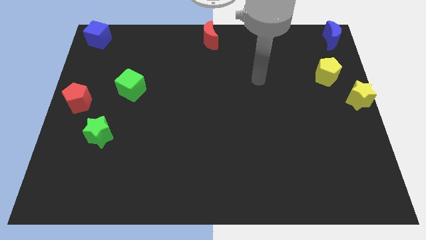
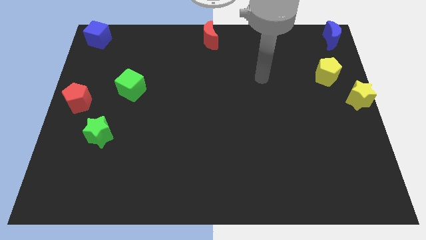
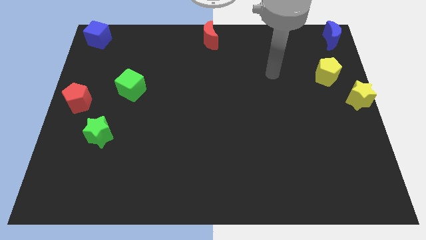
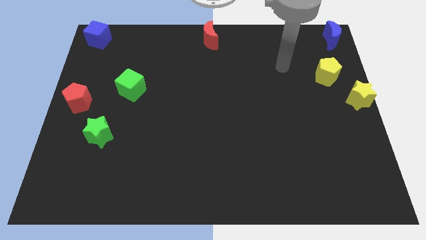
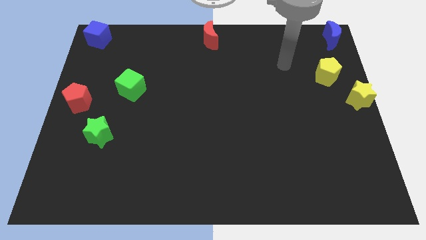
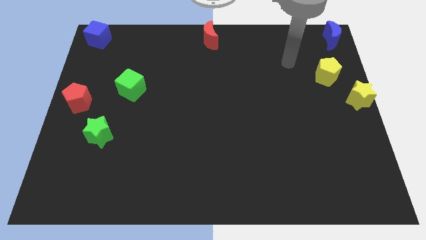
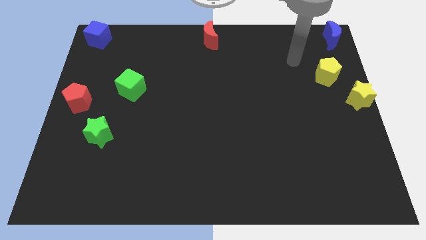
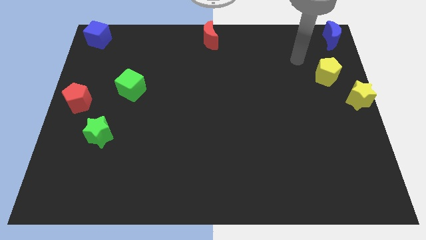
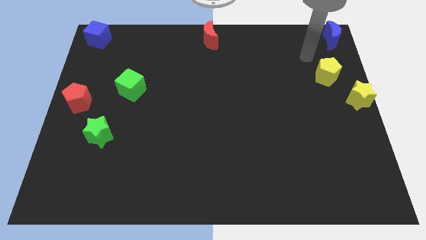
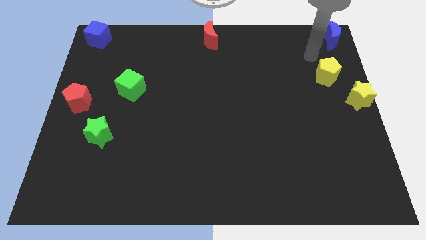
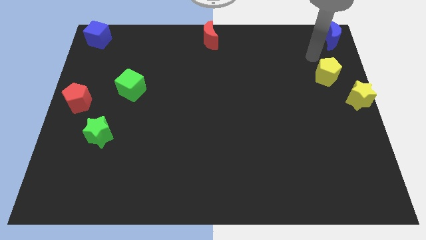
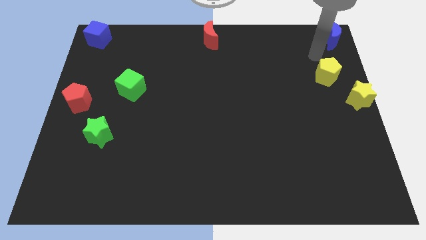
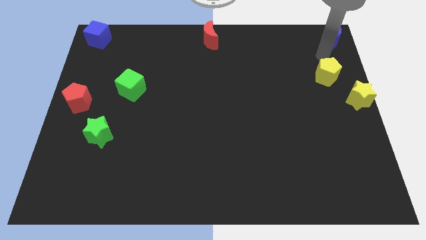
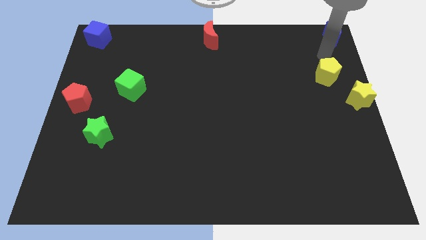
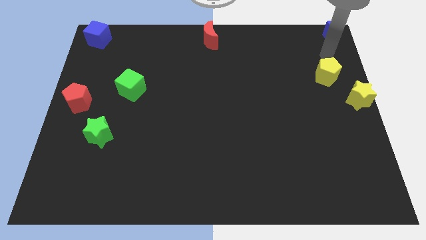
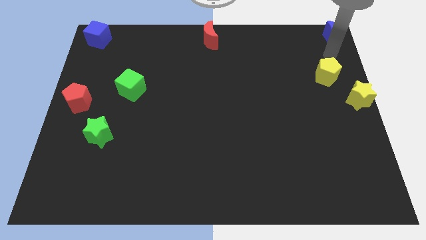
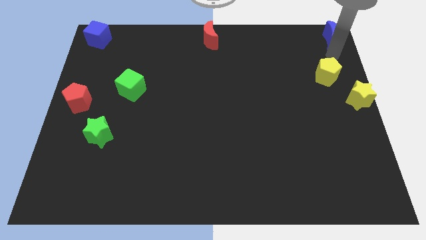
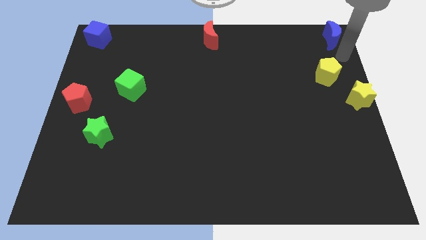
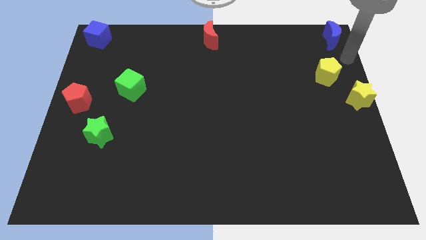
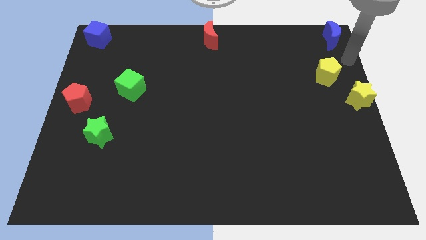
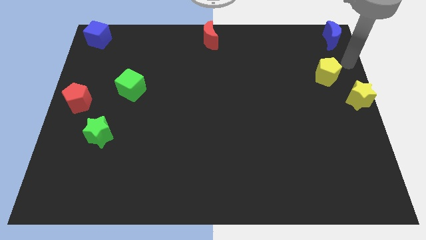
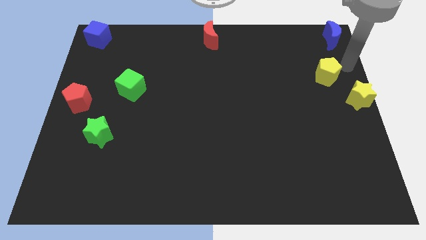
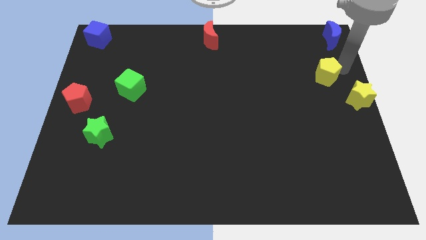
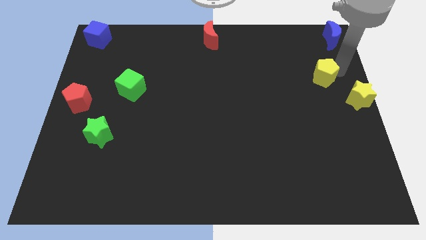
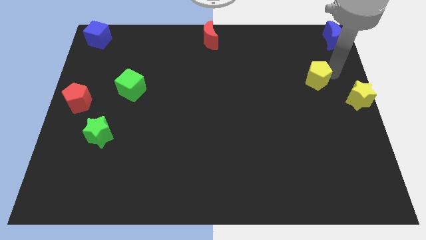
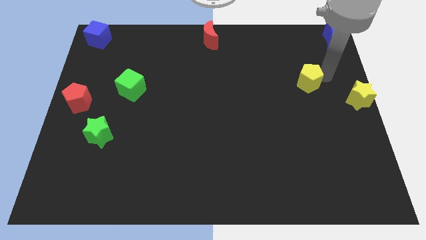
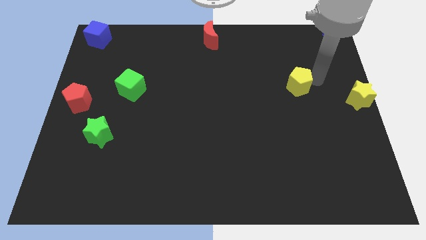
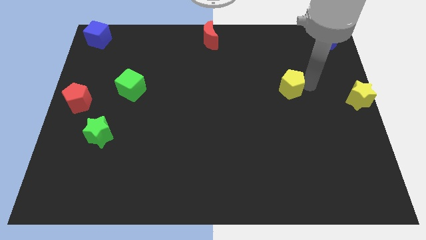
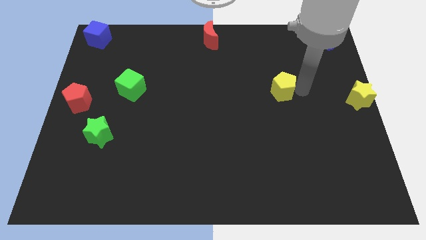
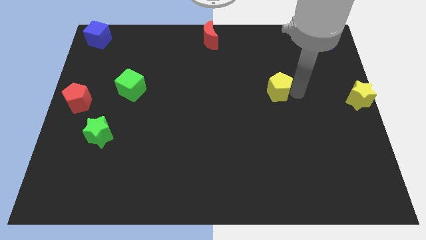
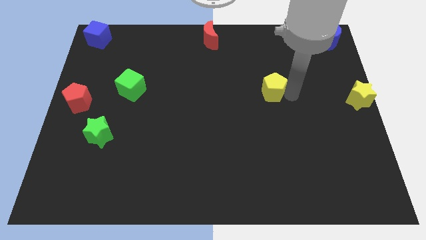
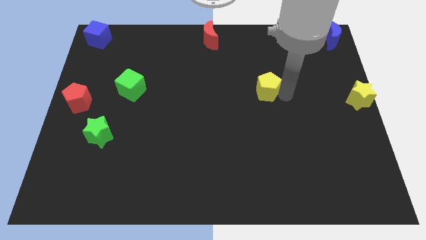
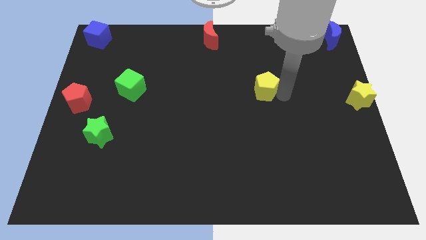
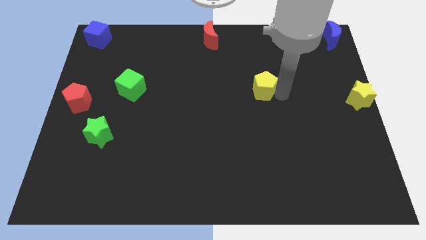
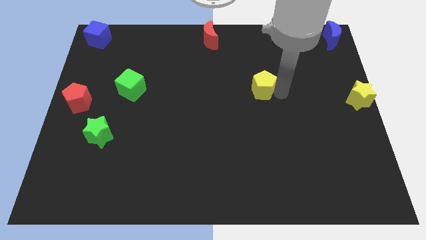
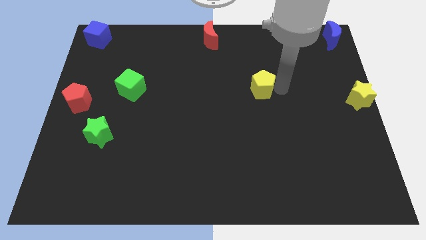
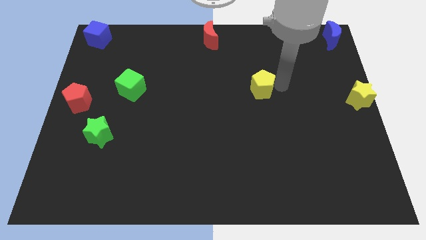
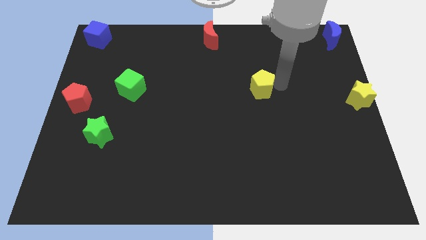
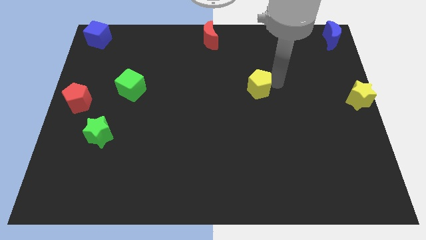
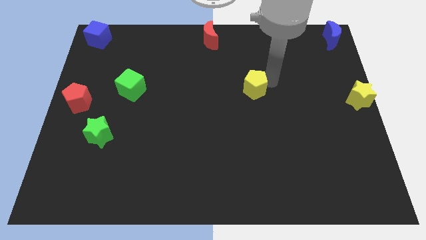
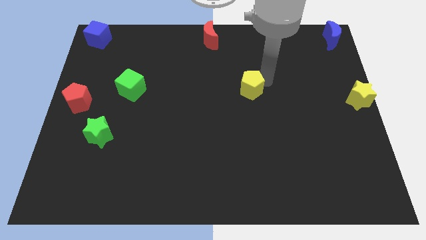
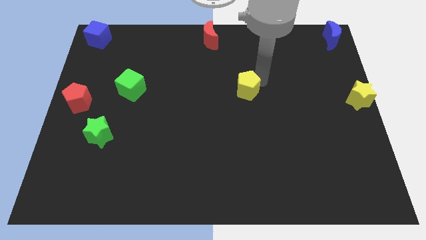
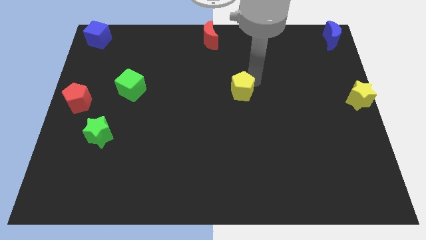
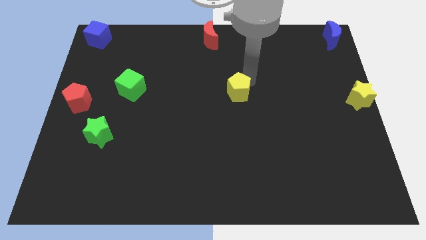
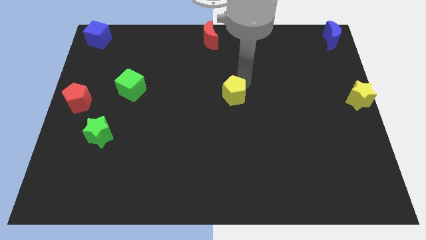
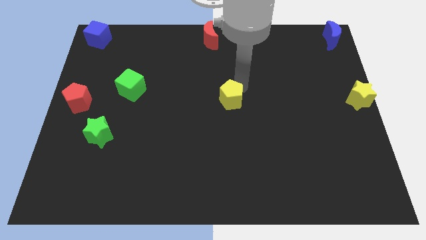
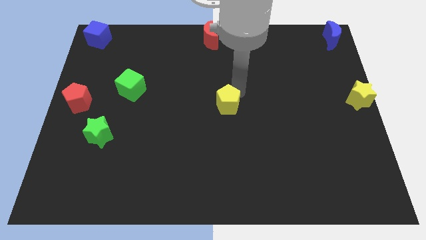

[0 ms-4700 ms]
place the yellow pentagon left to the yellow star

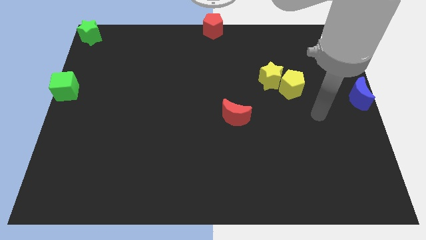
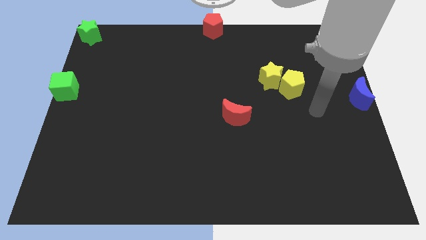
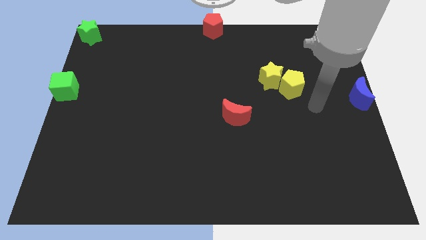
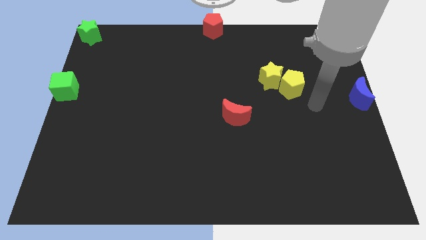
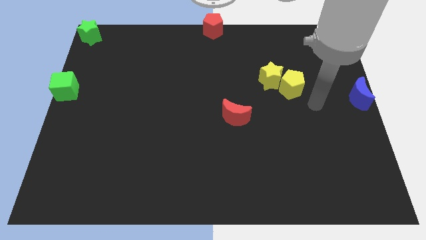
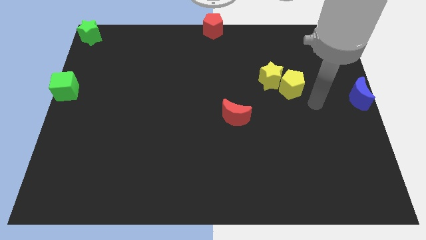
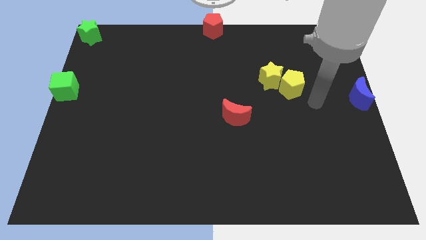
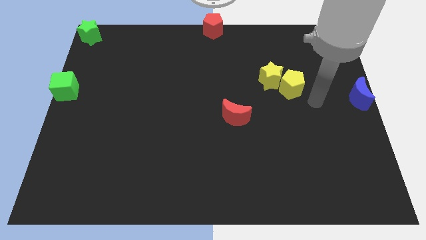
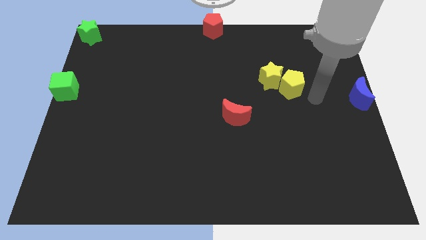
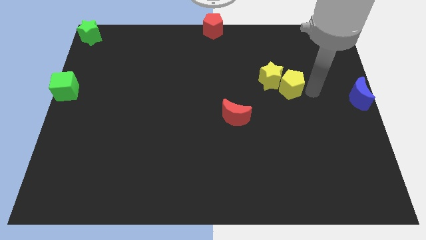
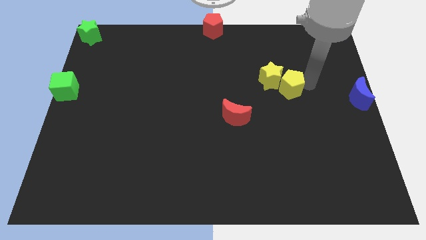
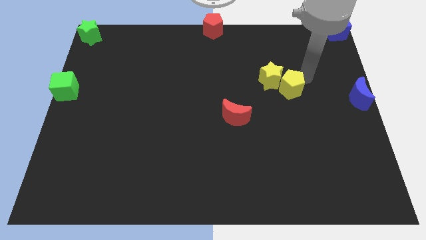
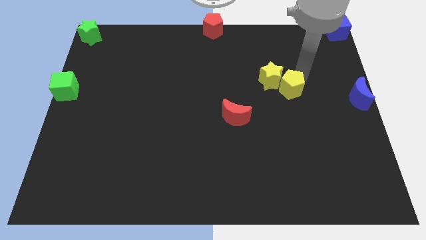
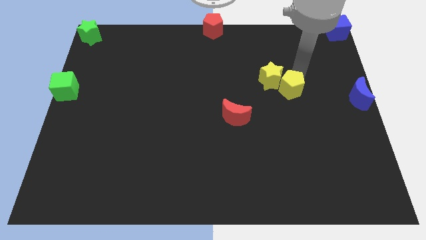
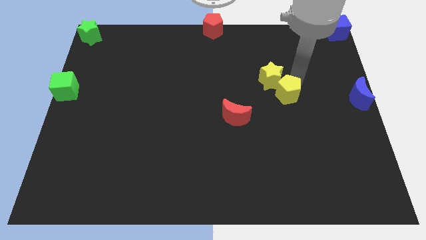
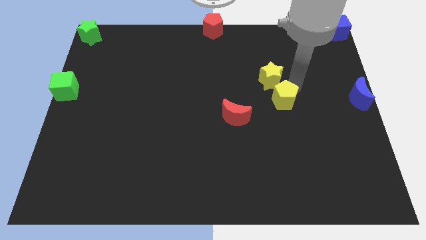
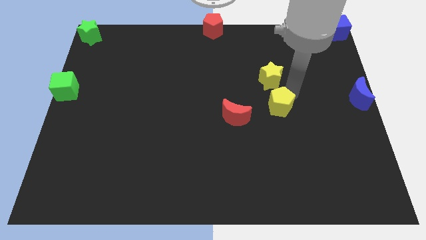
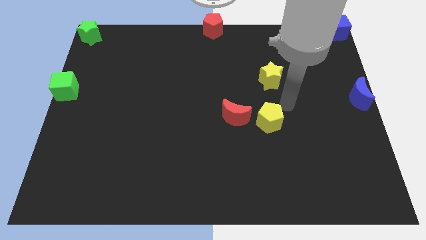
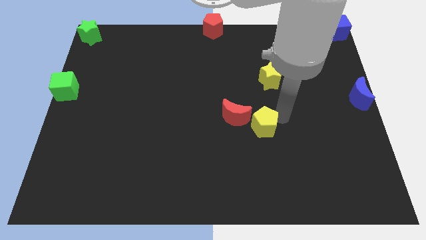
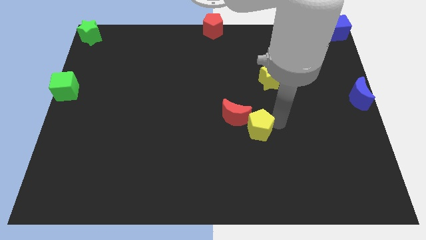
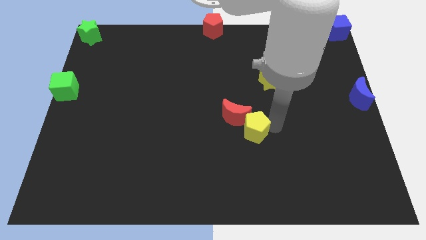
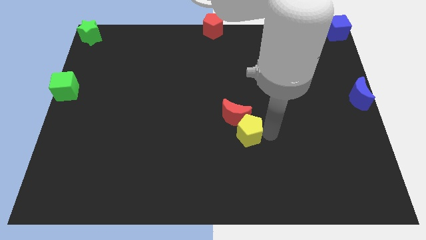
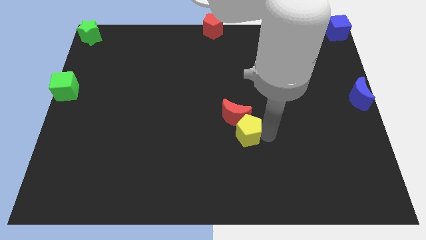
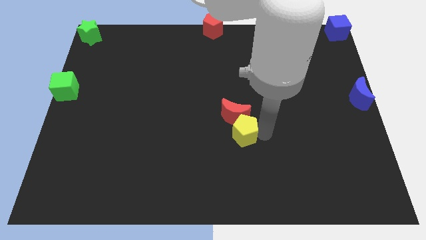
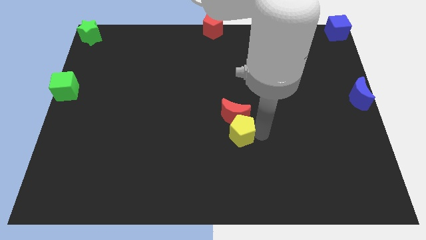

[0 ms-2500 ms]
place the yellow pentagon below the red crescent

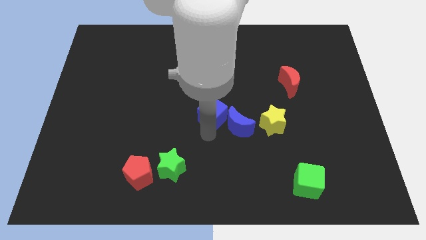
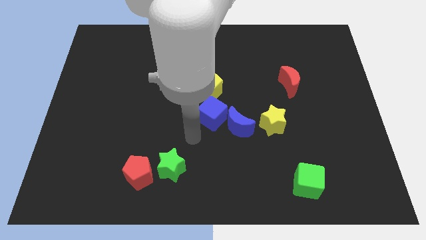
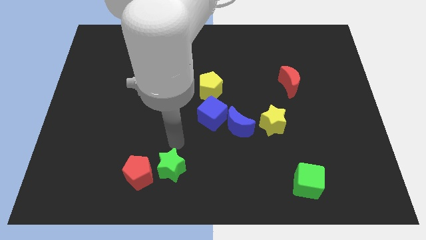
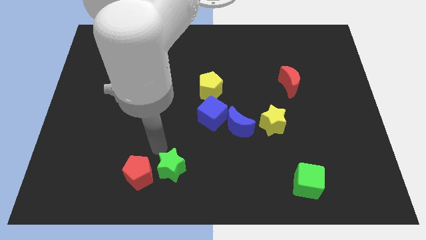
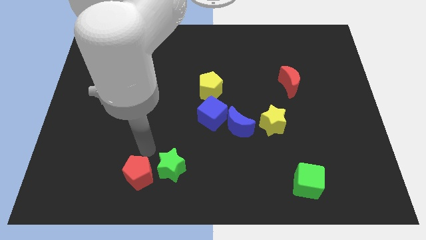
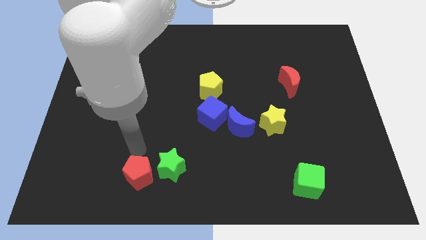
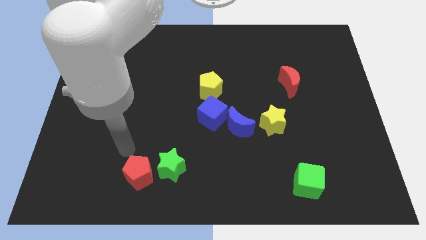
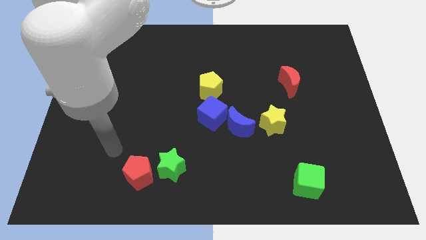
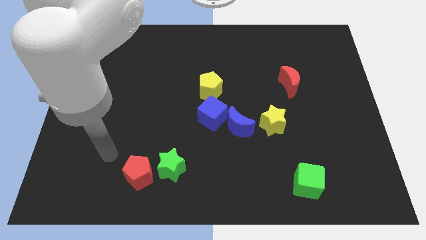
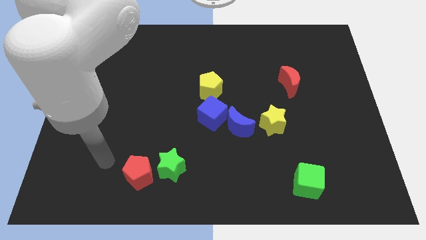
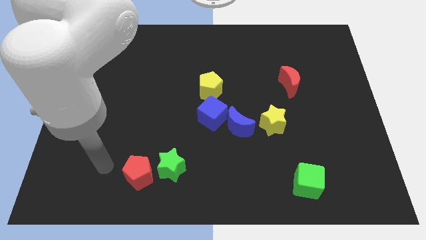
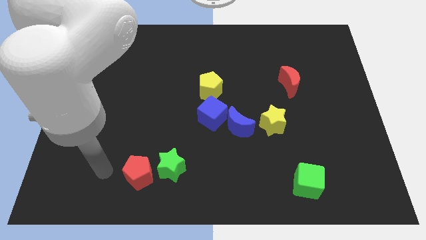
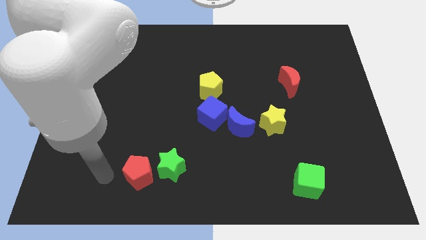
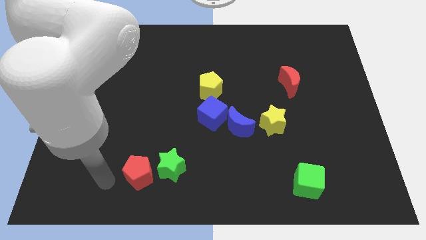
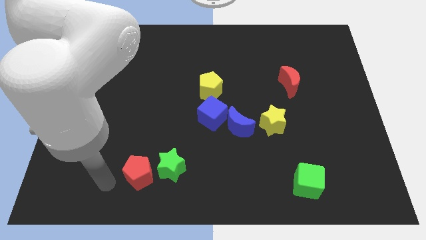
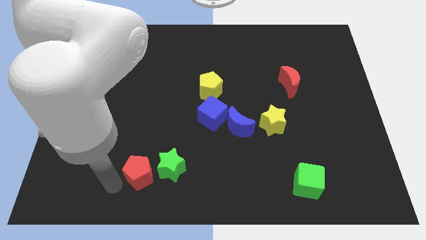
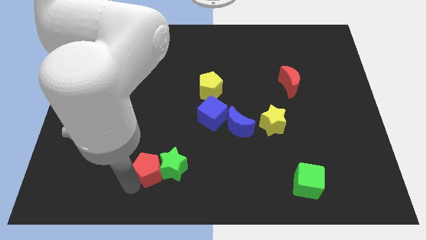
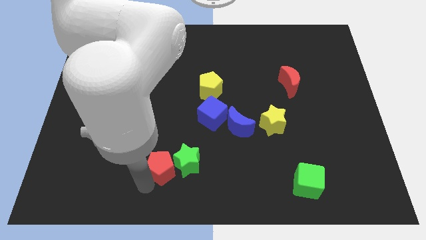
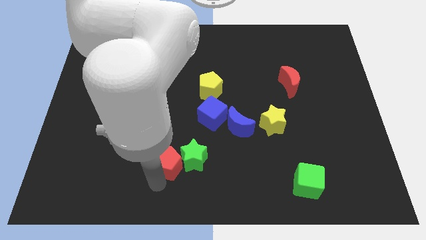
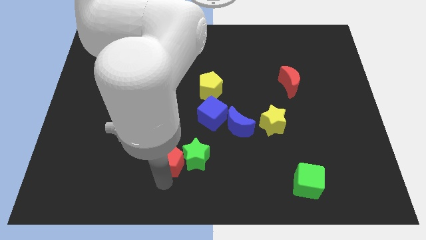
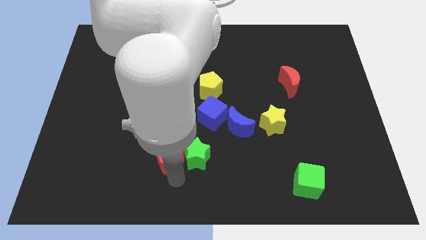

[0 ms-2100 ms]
push the green star with the red pentagon
